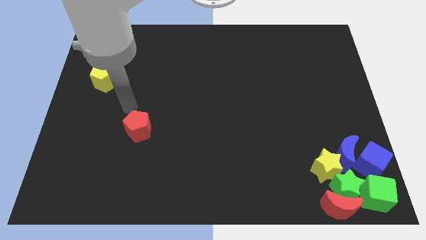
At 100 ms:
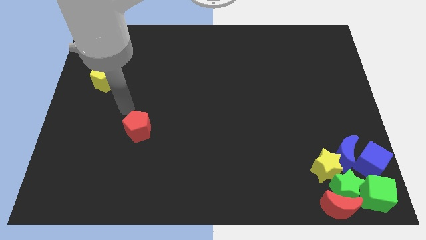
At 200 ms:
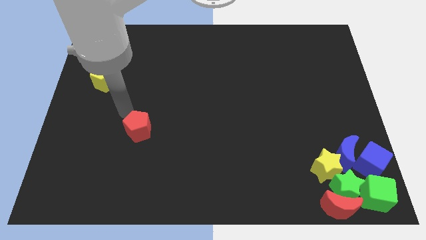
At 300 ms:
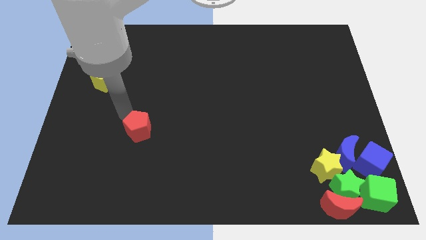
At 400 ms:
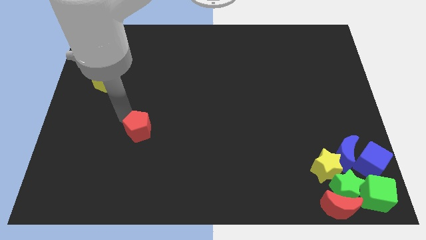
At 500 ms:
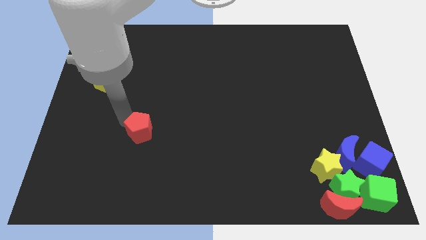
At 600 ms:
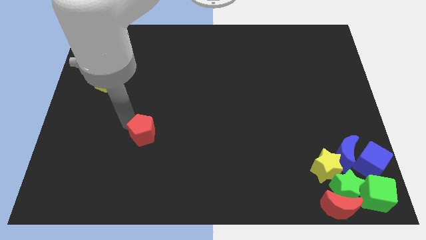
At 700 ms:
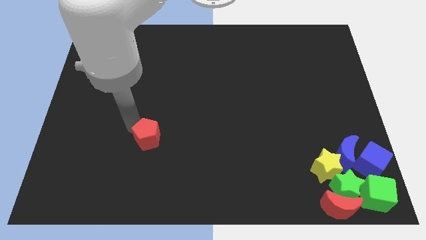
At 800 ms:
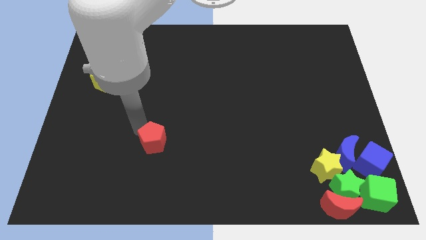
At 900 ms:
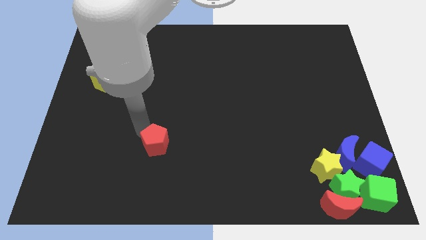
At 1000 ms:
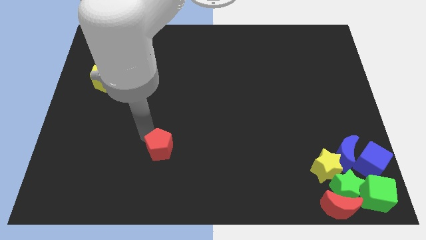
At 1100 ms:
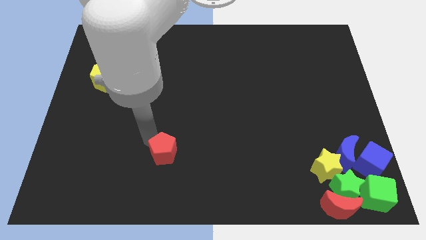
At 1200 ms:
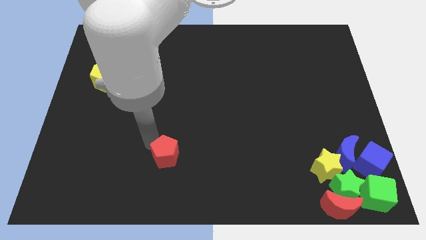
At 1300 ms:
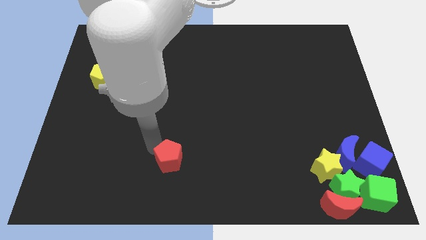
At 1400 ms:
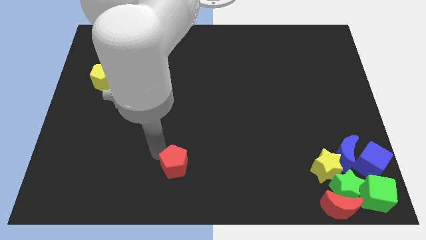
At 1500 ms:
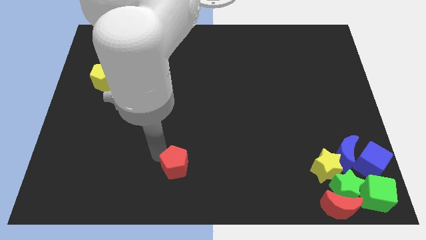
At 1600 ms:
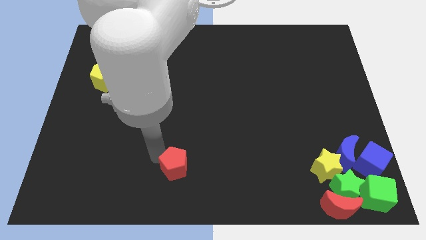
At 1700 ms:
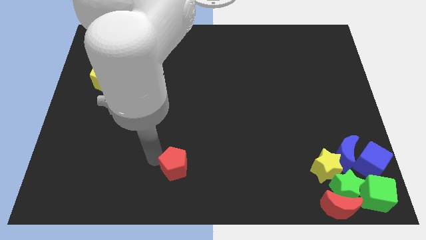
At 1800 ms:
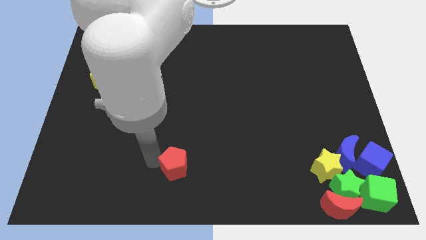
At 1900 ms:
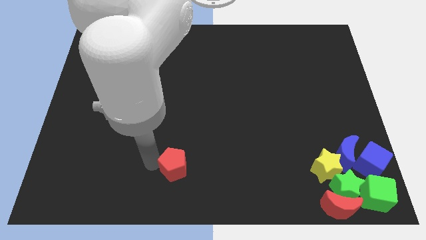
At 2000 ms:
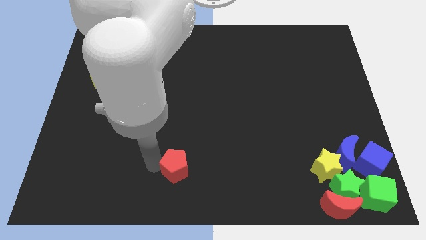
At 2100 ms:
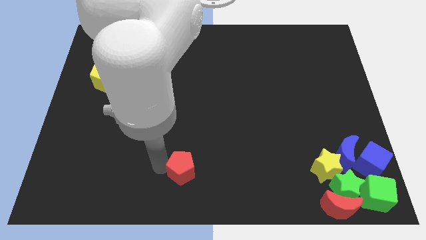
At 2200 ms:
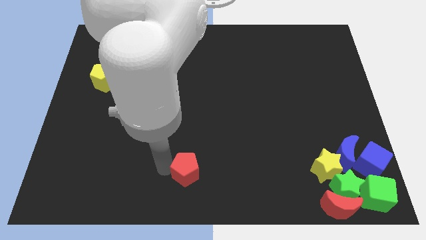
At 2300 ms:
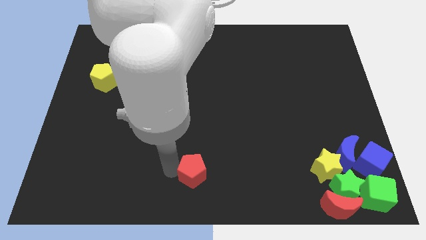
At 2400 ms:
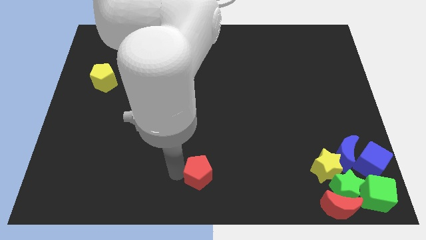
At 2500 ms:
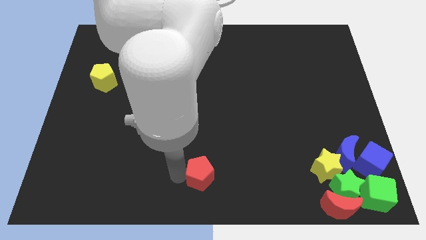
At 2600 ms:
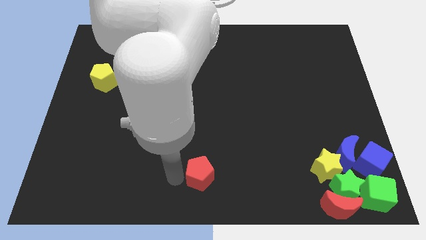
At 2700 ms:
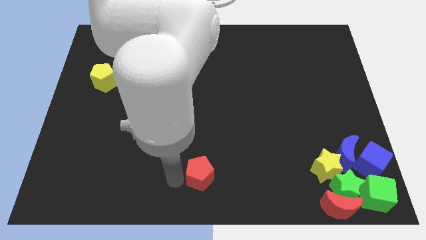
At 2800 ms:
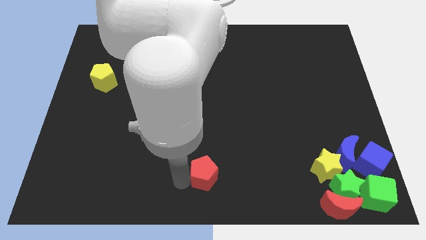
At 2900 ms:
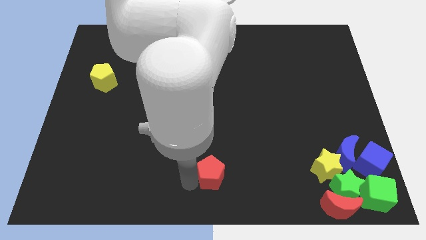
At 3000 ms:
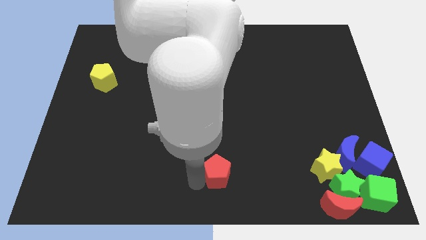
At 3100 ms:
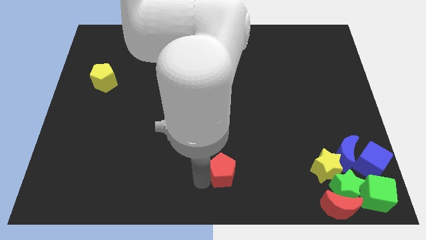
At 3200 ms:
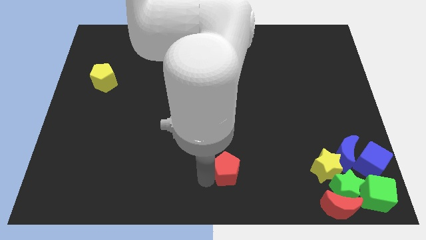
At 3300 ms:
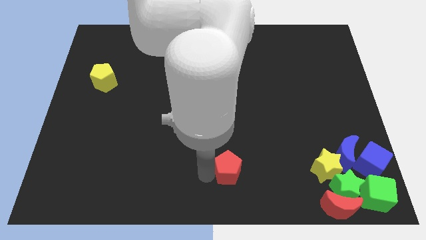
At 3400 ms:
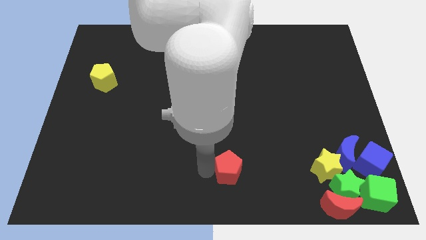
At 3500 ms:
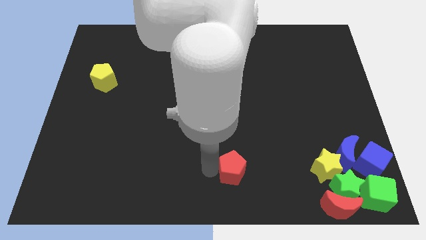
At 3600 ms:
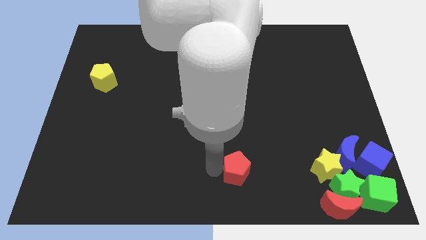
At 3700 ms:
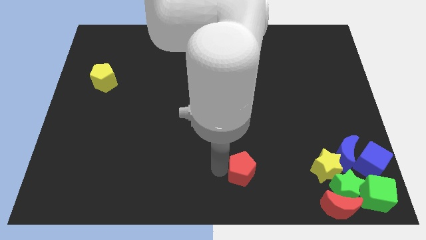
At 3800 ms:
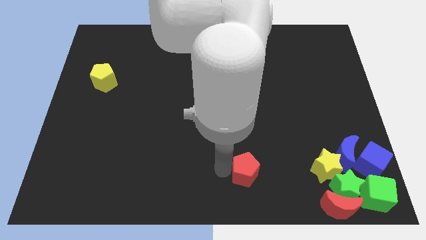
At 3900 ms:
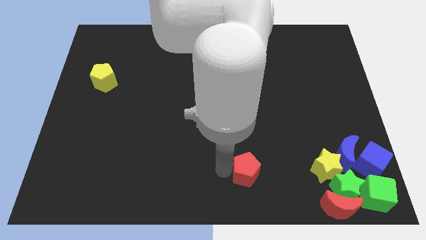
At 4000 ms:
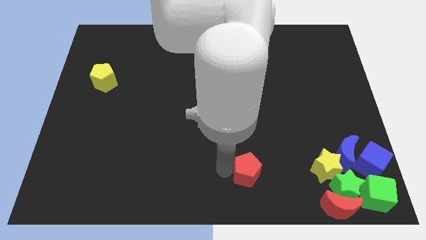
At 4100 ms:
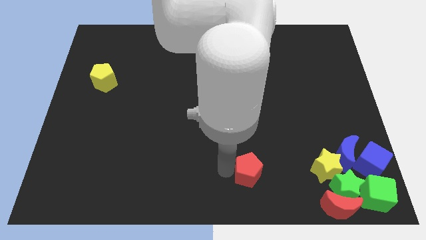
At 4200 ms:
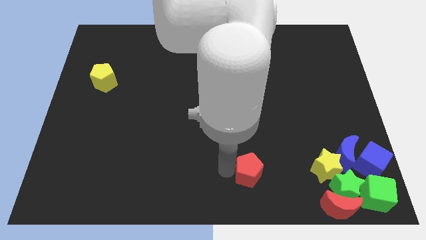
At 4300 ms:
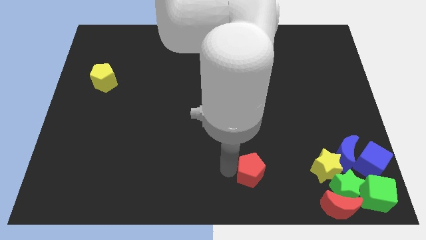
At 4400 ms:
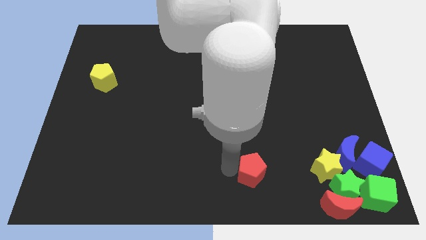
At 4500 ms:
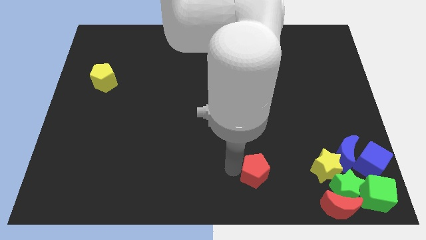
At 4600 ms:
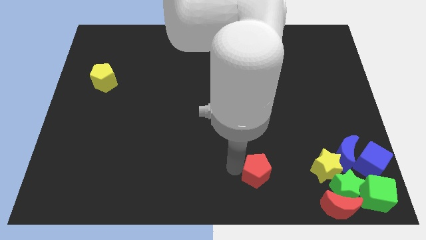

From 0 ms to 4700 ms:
place the red pentagon parallel to the yellow star

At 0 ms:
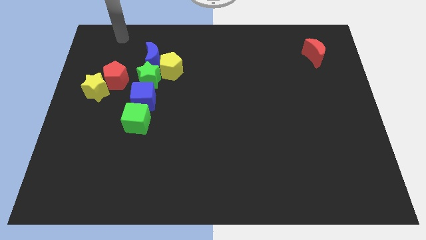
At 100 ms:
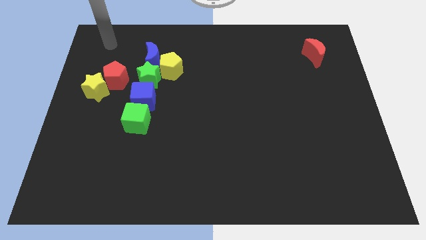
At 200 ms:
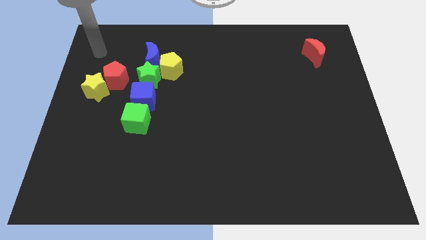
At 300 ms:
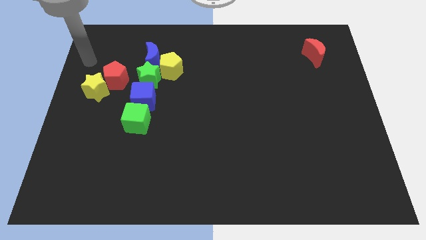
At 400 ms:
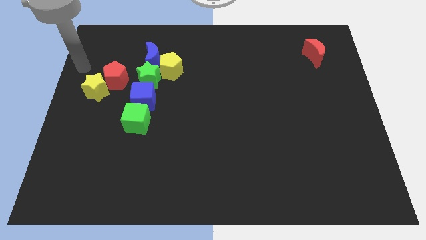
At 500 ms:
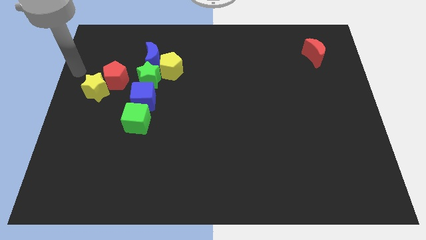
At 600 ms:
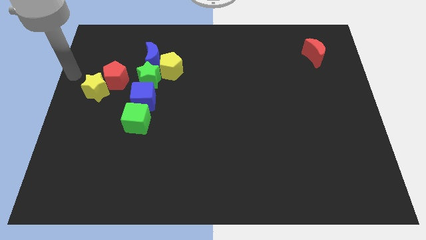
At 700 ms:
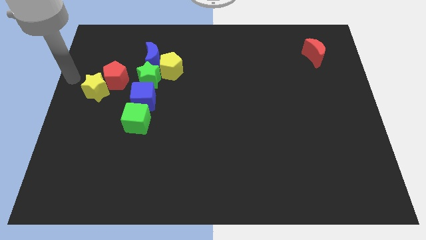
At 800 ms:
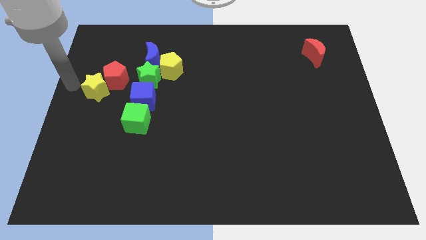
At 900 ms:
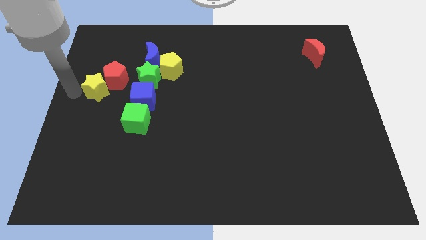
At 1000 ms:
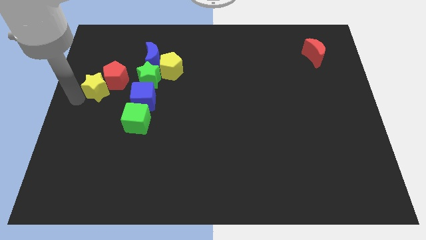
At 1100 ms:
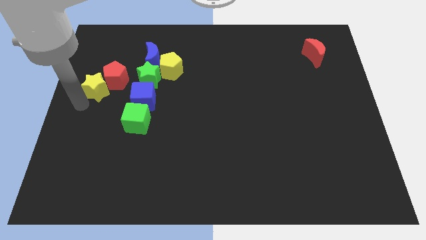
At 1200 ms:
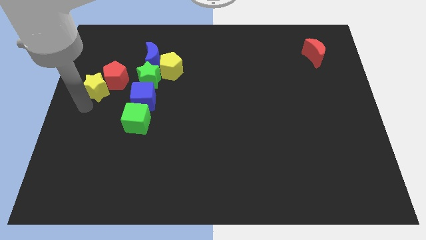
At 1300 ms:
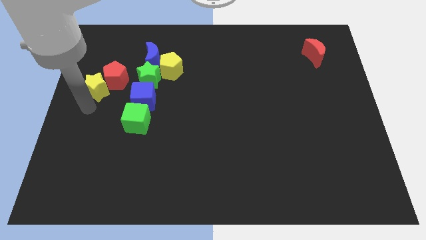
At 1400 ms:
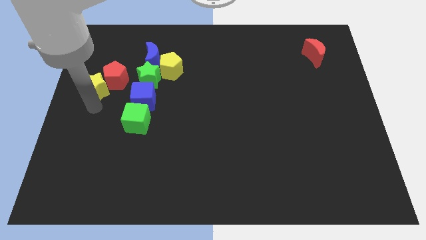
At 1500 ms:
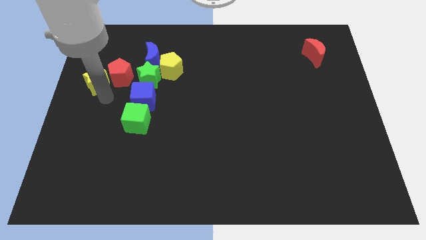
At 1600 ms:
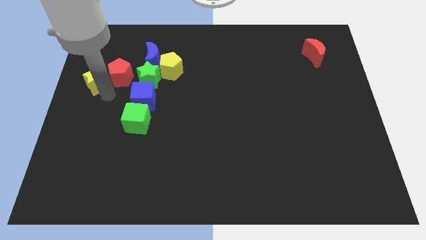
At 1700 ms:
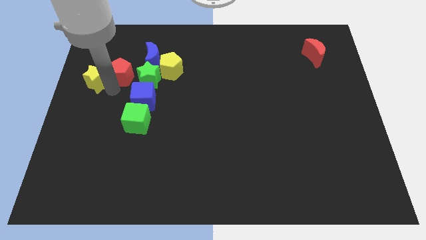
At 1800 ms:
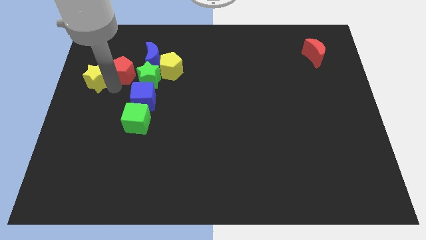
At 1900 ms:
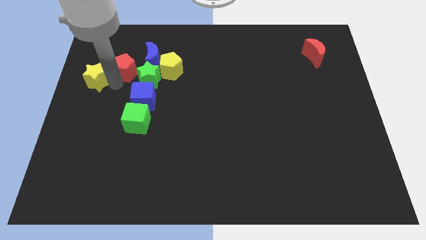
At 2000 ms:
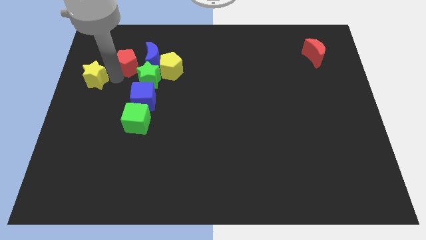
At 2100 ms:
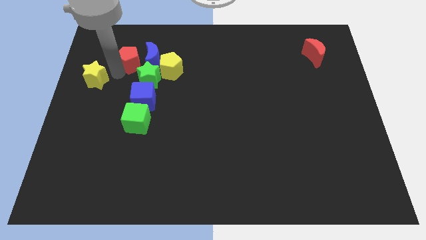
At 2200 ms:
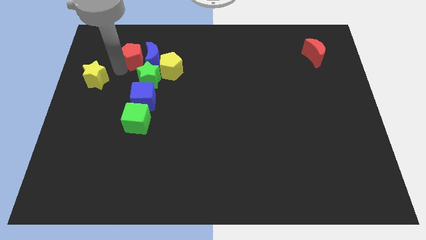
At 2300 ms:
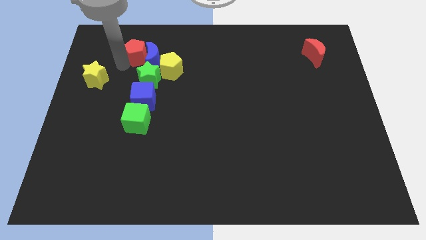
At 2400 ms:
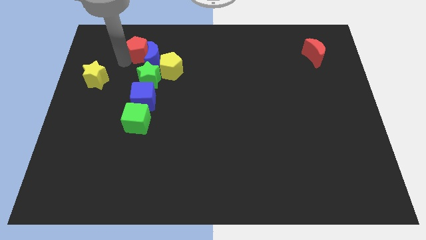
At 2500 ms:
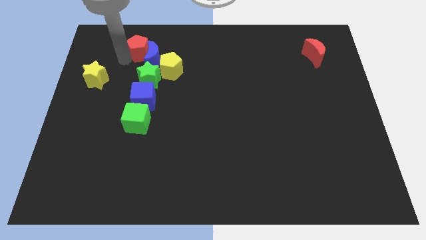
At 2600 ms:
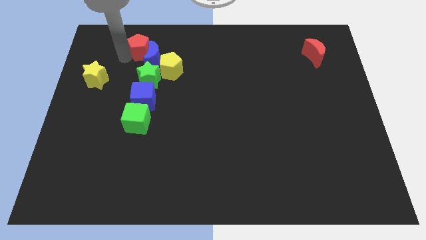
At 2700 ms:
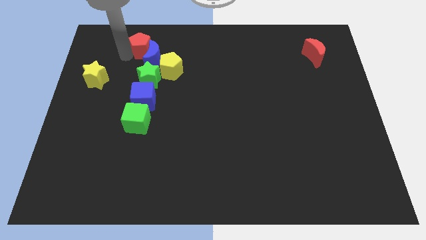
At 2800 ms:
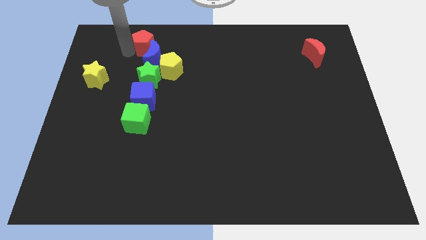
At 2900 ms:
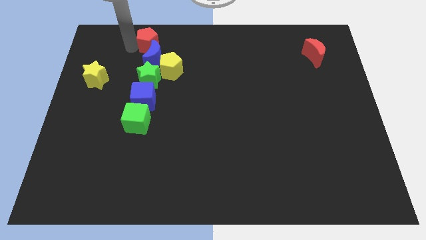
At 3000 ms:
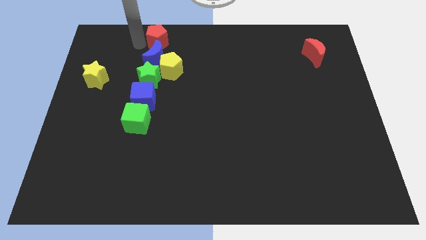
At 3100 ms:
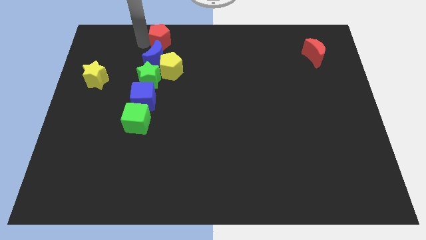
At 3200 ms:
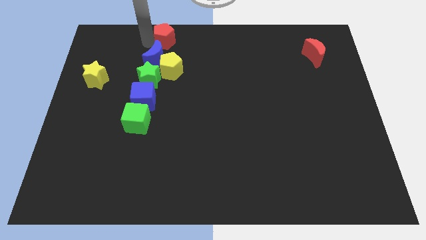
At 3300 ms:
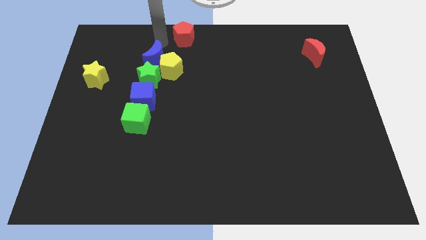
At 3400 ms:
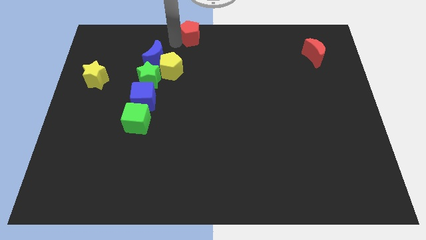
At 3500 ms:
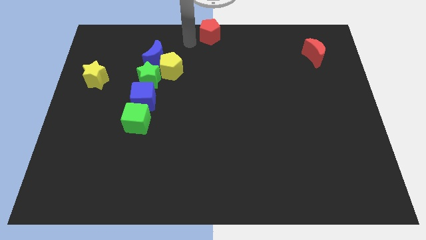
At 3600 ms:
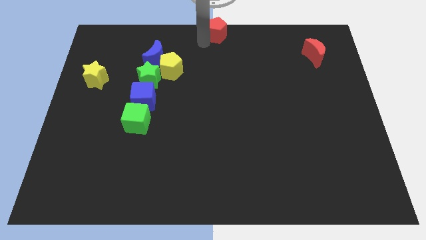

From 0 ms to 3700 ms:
slide the red pentagon to the top center of the table

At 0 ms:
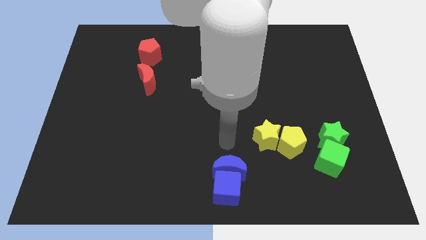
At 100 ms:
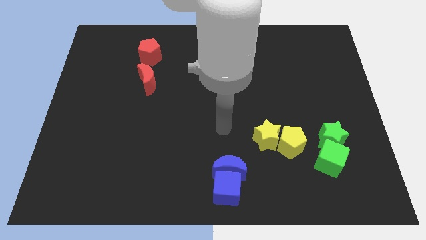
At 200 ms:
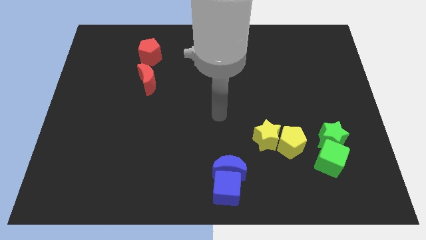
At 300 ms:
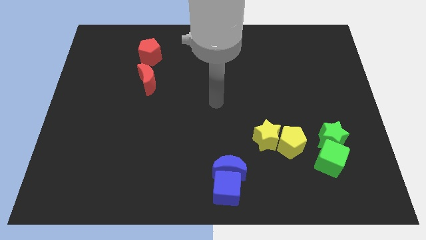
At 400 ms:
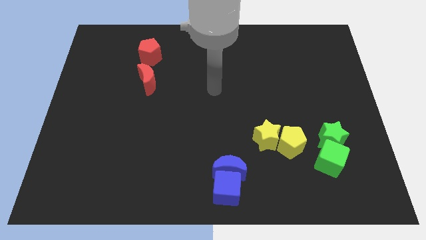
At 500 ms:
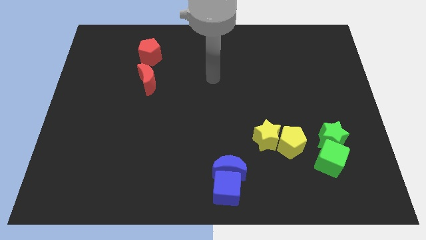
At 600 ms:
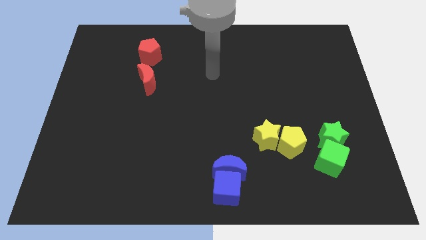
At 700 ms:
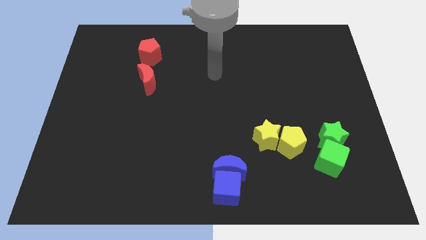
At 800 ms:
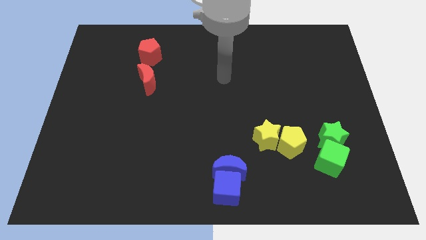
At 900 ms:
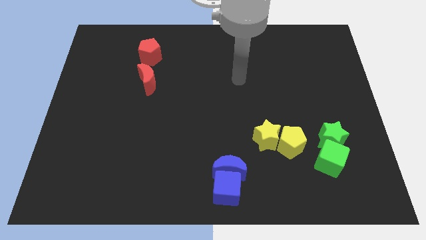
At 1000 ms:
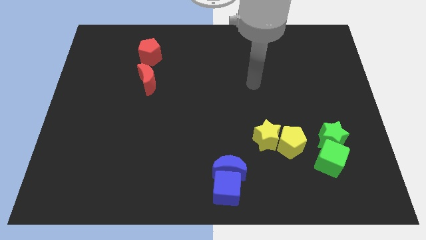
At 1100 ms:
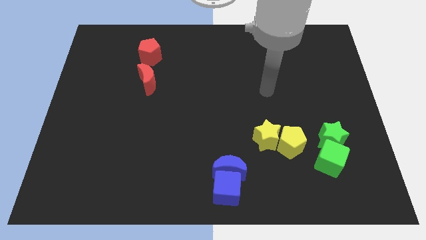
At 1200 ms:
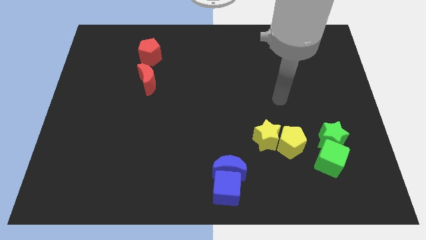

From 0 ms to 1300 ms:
move your arm from blue blocks to above of the yellow blocks
